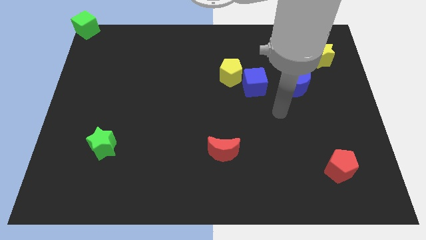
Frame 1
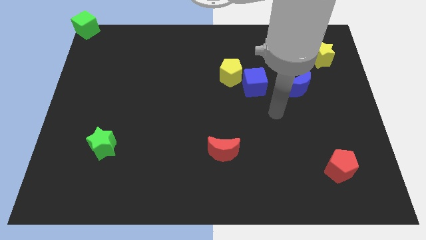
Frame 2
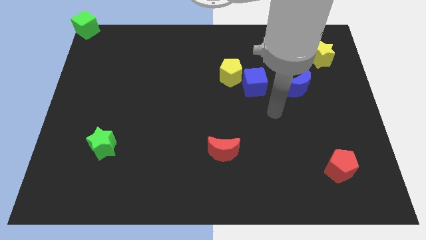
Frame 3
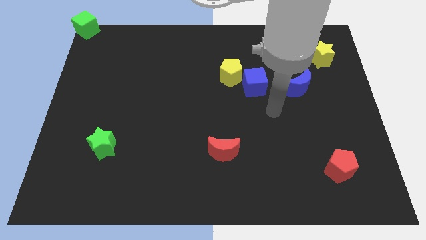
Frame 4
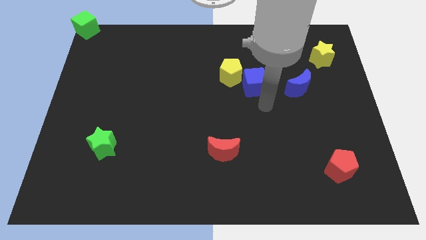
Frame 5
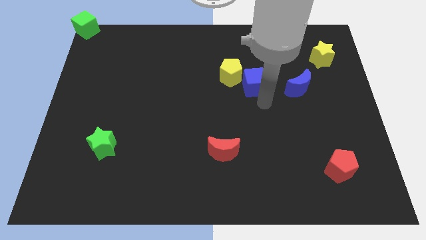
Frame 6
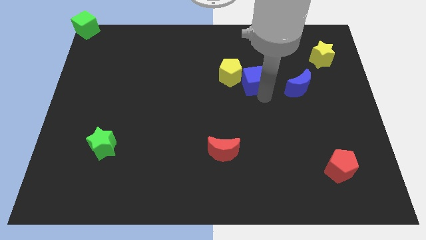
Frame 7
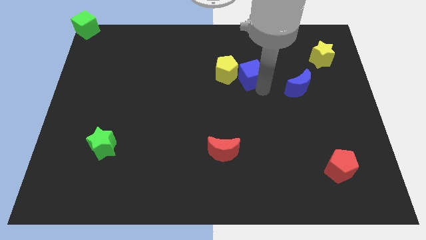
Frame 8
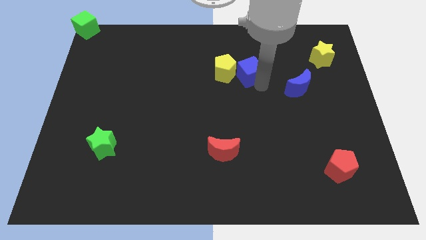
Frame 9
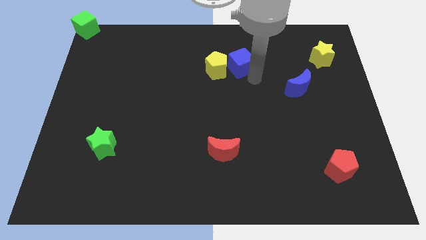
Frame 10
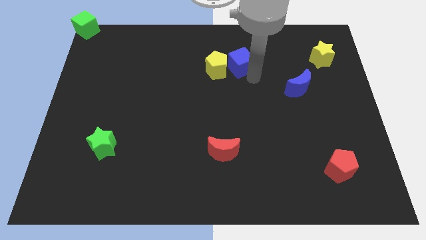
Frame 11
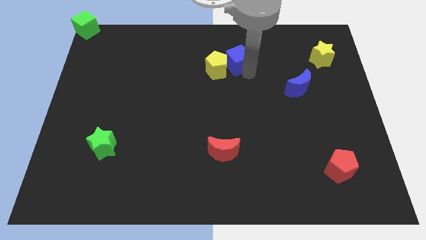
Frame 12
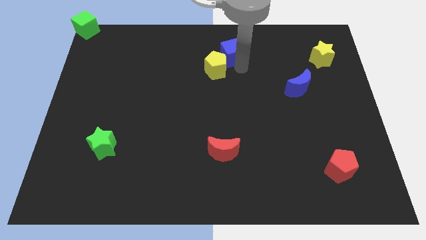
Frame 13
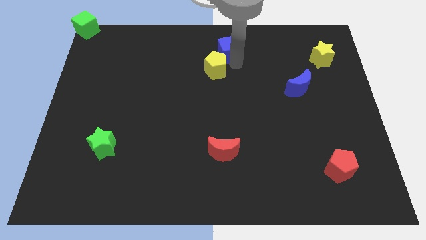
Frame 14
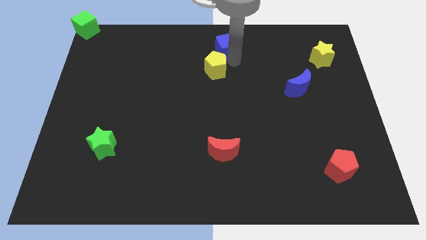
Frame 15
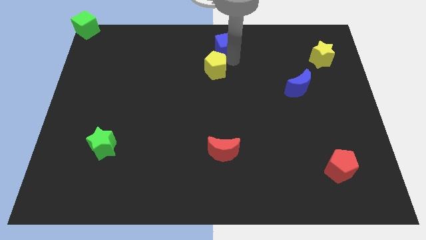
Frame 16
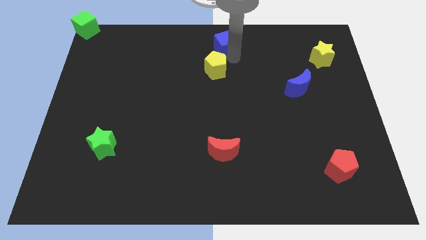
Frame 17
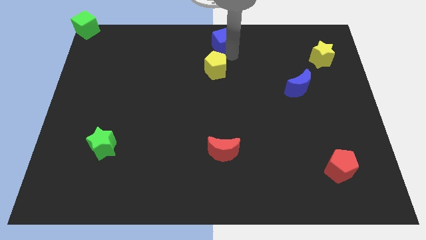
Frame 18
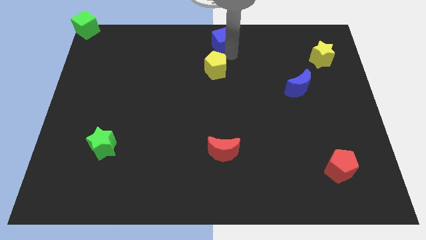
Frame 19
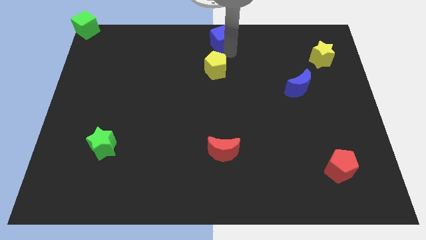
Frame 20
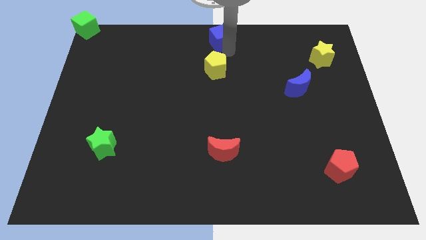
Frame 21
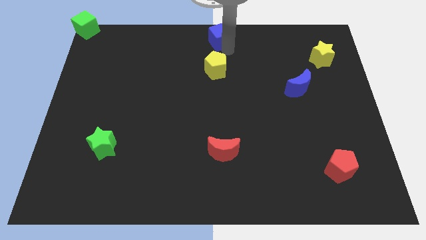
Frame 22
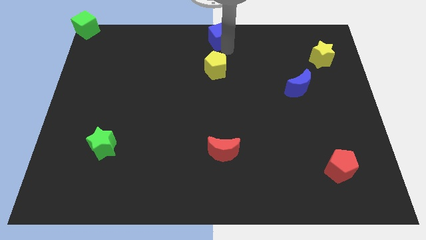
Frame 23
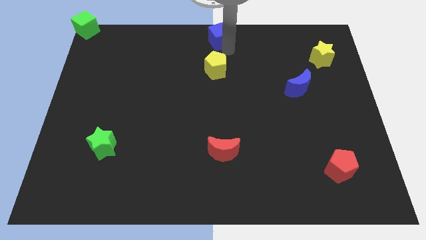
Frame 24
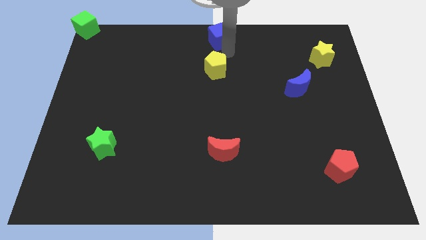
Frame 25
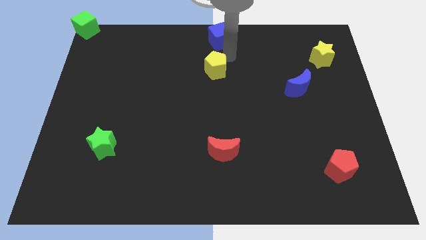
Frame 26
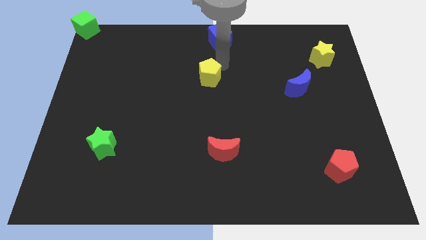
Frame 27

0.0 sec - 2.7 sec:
push the blue cube to top center

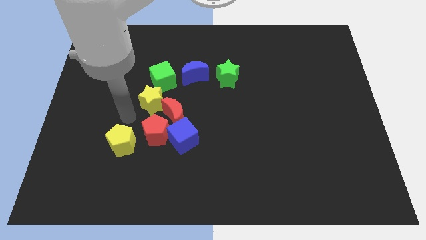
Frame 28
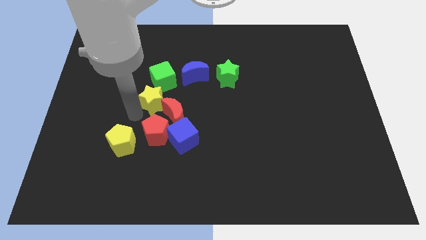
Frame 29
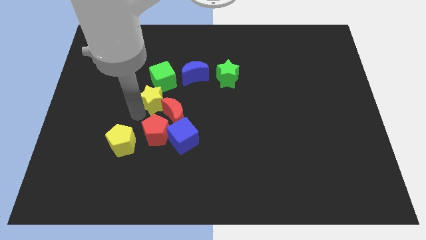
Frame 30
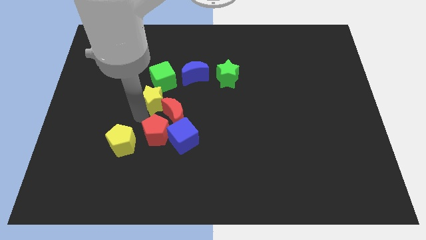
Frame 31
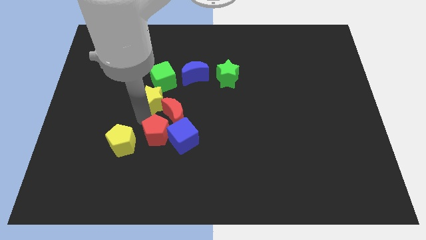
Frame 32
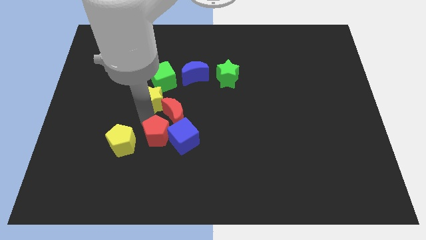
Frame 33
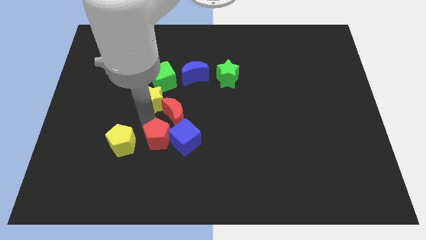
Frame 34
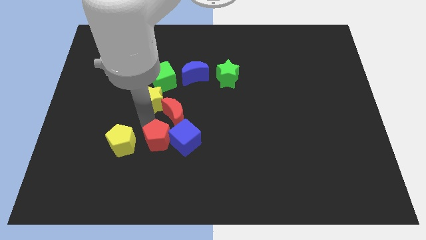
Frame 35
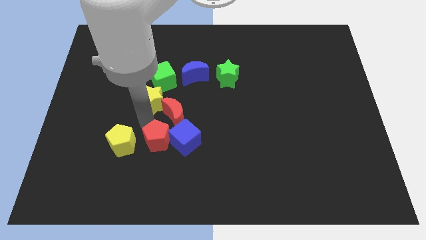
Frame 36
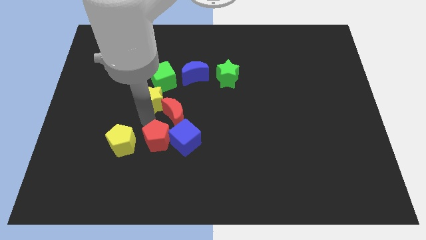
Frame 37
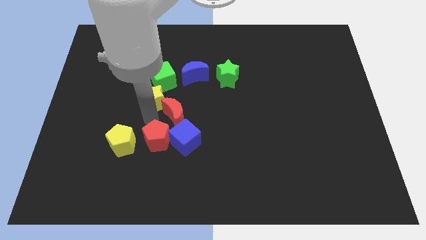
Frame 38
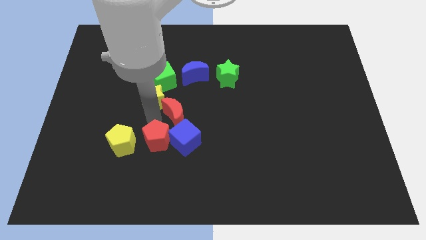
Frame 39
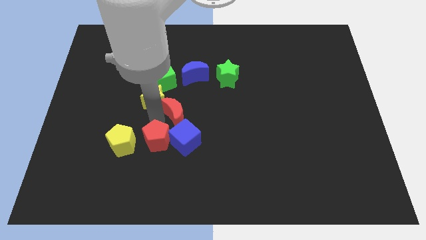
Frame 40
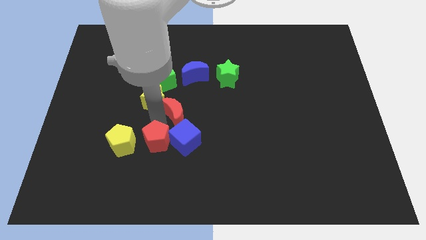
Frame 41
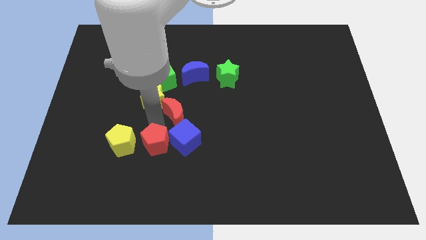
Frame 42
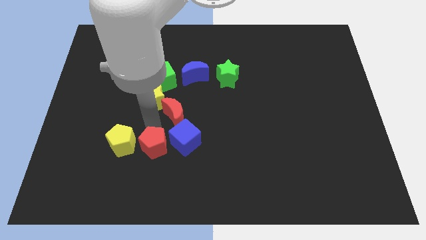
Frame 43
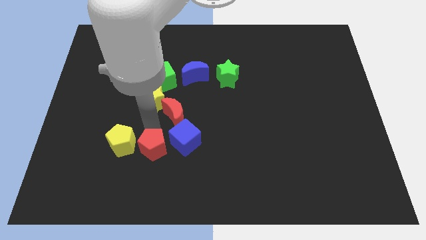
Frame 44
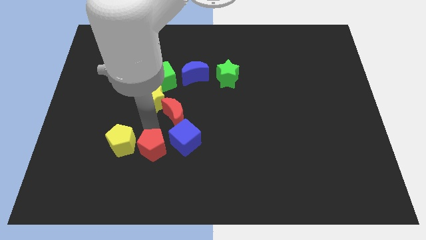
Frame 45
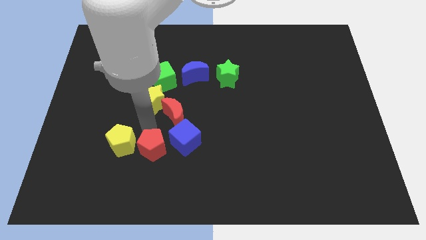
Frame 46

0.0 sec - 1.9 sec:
move the red pentagon between yellow pentagon and blue cube

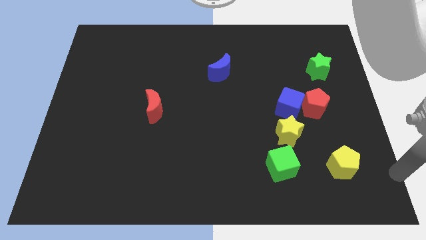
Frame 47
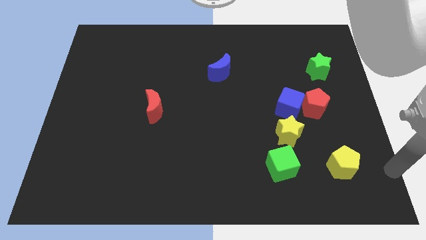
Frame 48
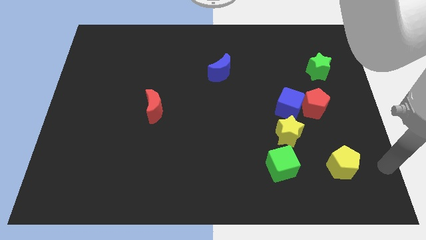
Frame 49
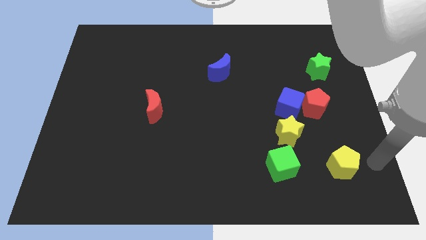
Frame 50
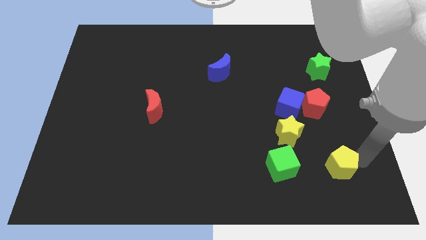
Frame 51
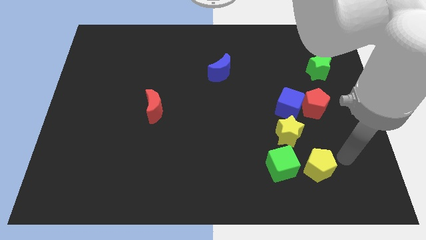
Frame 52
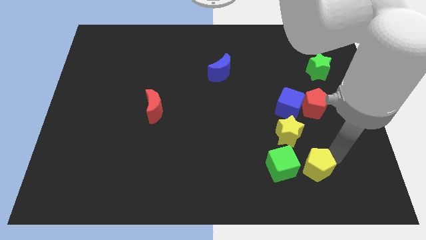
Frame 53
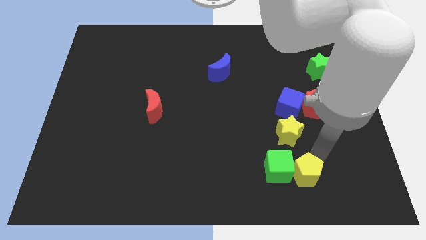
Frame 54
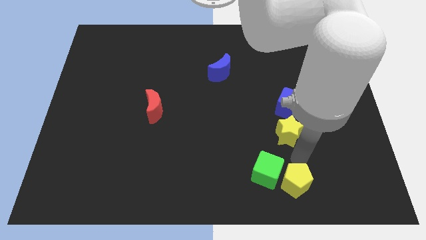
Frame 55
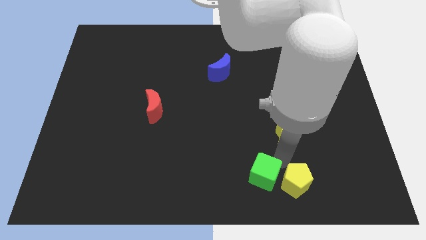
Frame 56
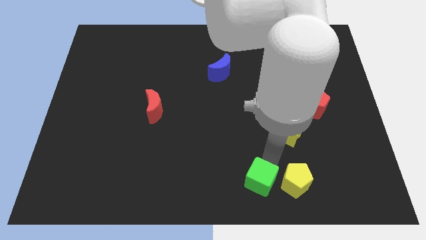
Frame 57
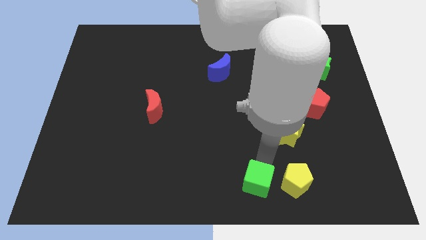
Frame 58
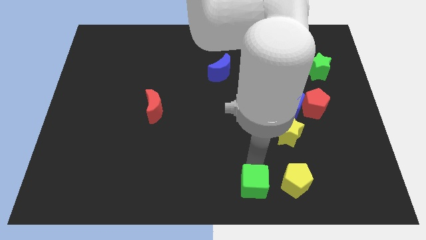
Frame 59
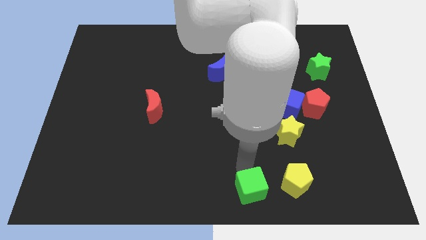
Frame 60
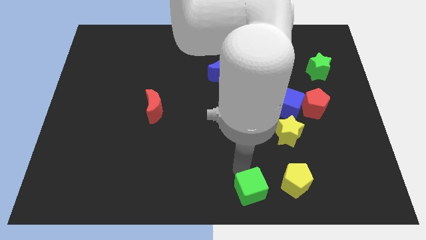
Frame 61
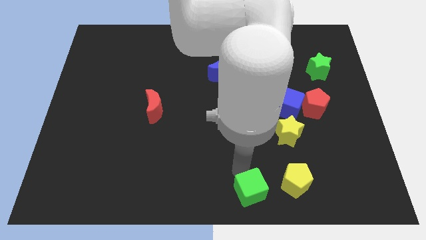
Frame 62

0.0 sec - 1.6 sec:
move green cubeyellow pentagon to slightly left

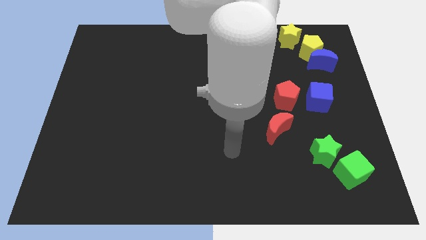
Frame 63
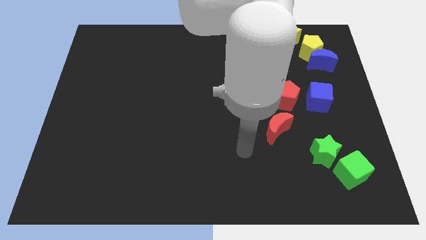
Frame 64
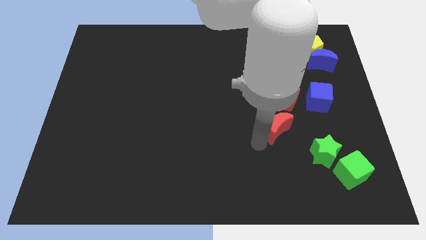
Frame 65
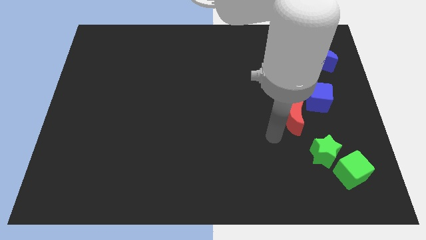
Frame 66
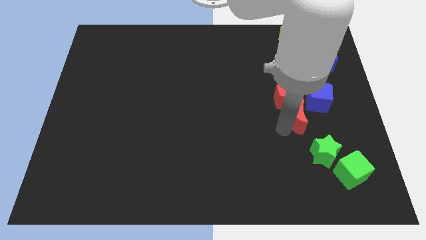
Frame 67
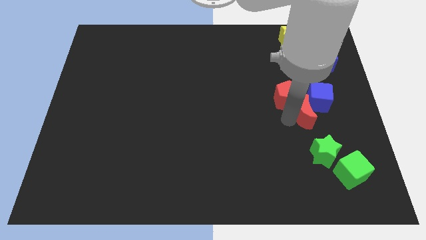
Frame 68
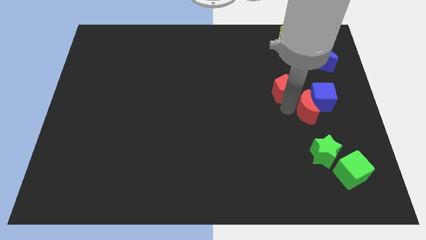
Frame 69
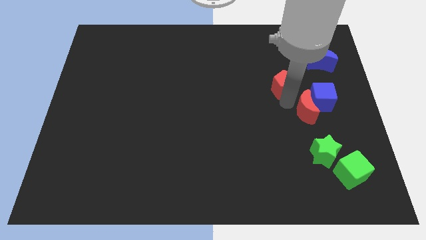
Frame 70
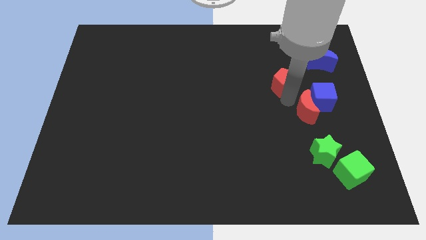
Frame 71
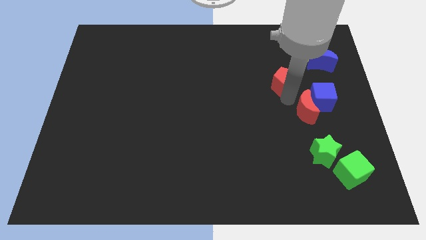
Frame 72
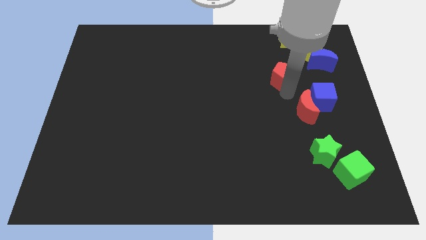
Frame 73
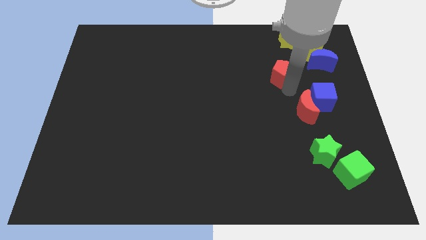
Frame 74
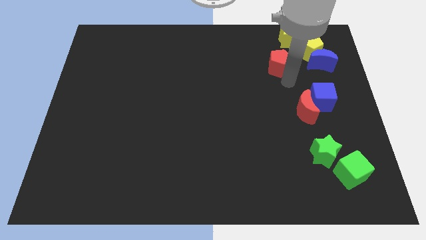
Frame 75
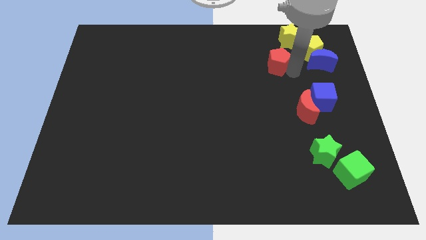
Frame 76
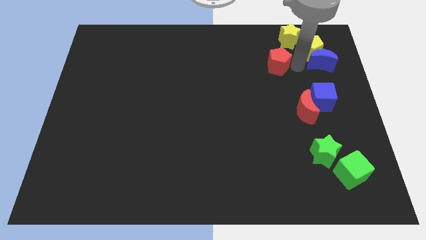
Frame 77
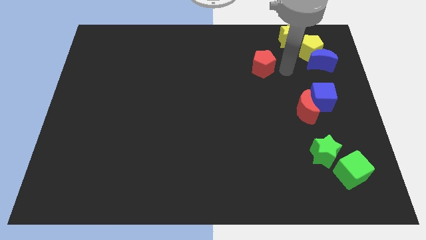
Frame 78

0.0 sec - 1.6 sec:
move the red crescent to the left of the blue cube

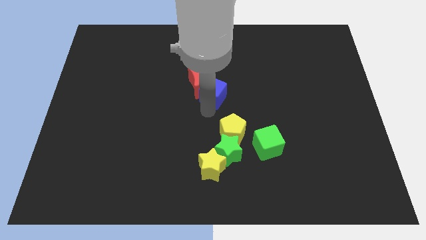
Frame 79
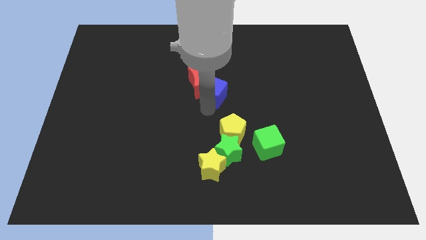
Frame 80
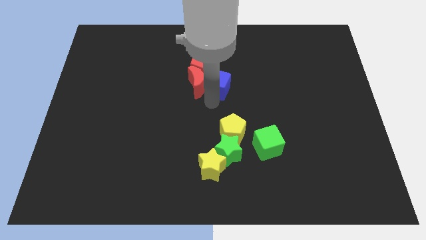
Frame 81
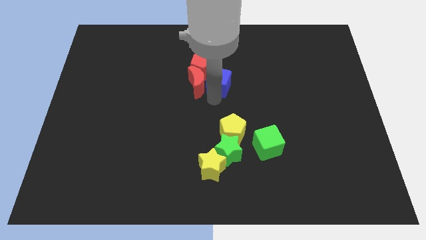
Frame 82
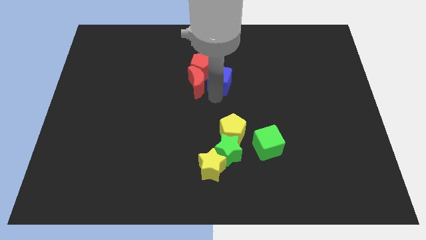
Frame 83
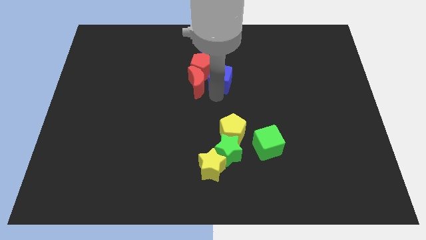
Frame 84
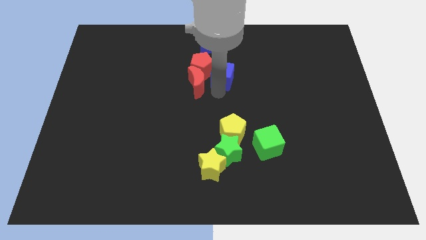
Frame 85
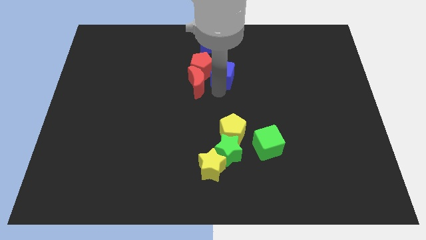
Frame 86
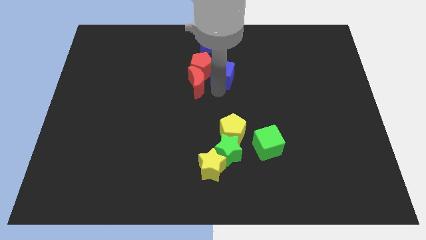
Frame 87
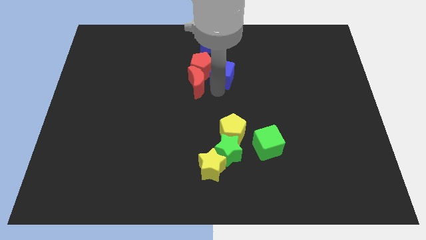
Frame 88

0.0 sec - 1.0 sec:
push blue cube slightly upwards

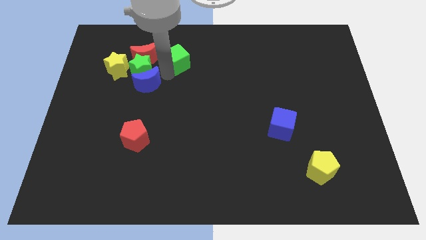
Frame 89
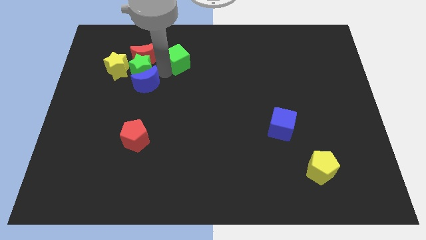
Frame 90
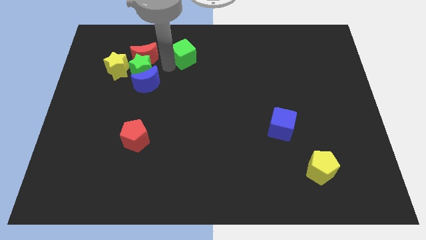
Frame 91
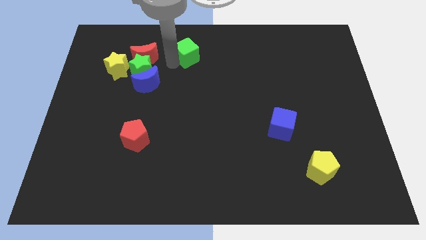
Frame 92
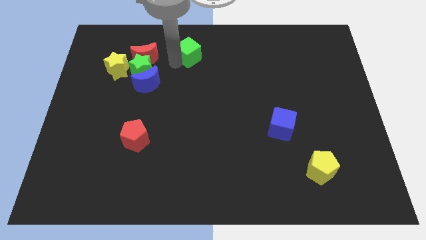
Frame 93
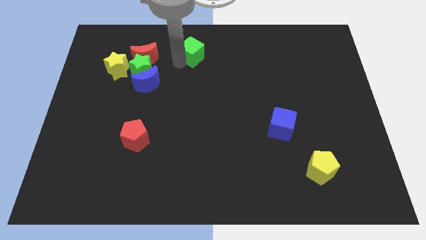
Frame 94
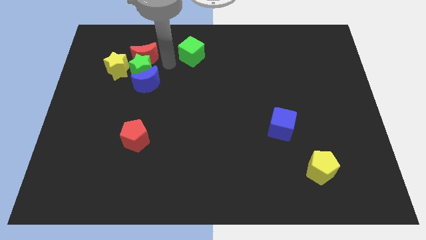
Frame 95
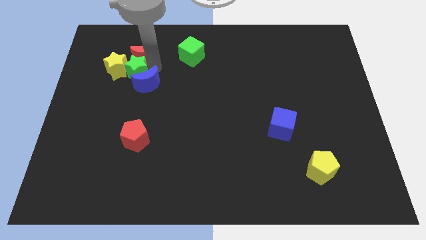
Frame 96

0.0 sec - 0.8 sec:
push the green cube near to the top center
